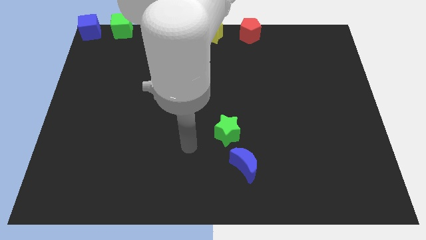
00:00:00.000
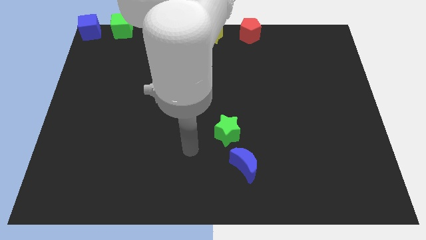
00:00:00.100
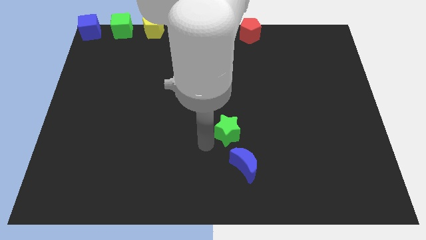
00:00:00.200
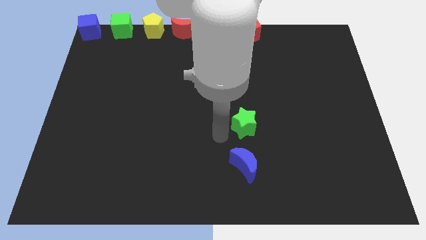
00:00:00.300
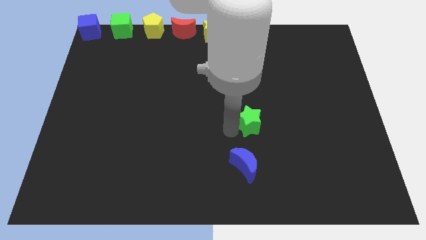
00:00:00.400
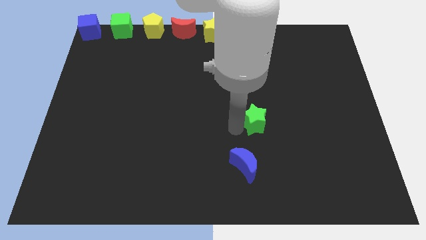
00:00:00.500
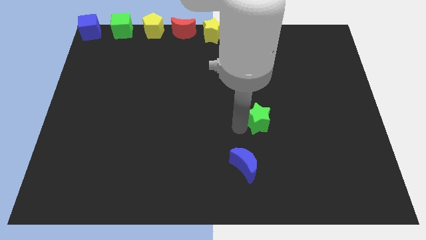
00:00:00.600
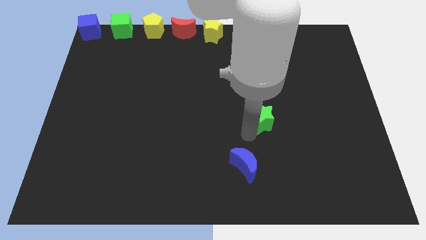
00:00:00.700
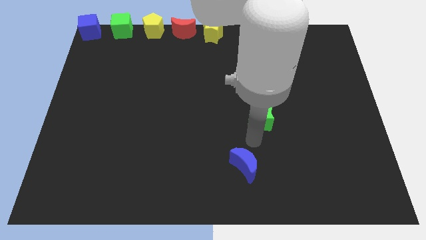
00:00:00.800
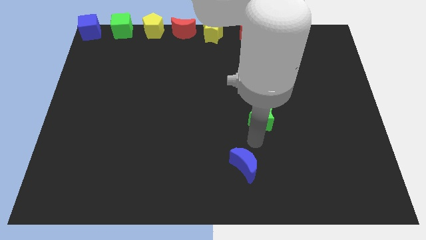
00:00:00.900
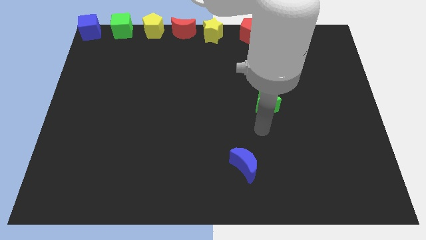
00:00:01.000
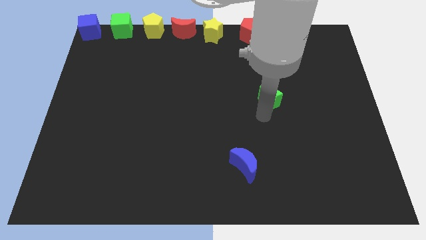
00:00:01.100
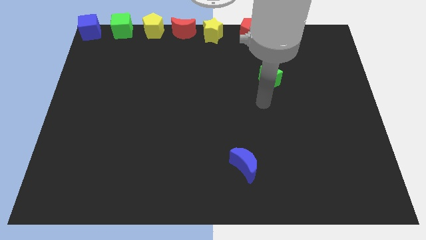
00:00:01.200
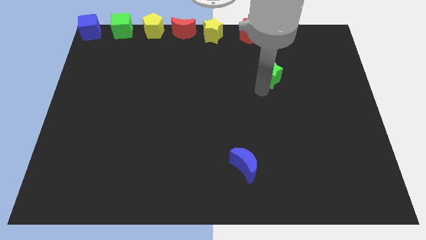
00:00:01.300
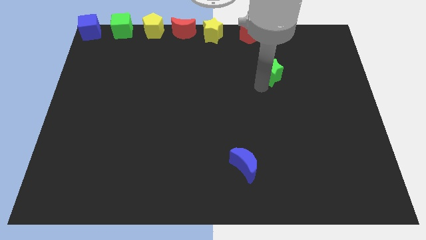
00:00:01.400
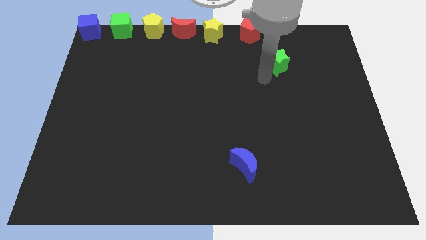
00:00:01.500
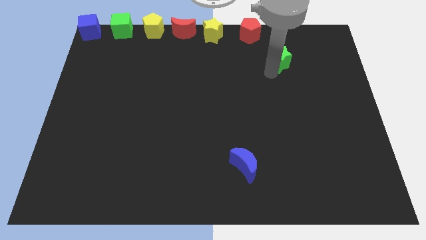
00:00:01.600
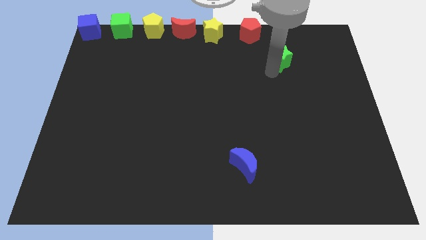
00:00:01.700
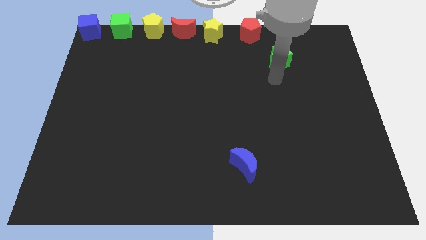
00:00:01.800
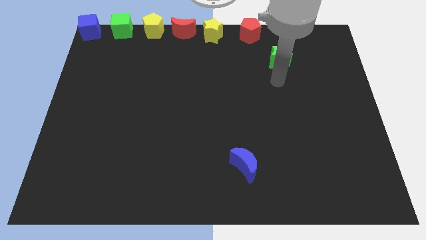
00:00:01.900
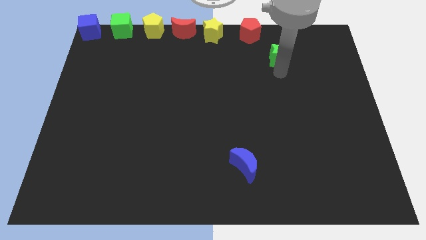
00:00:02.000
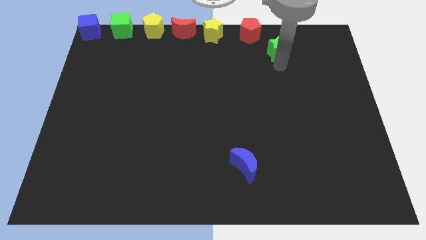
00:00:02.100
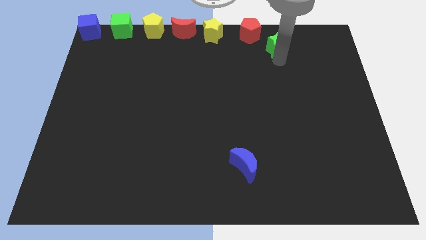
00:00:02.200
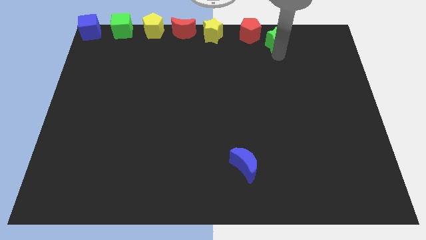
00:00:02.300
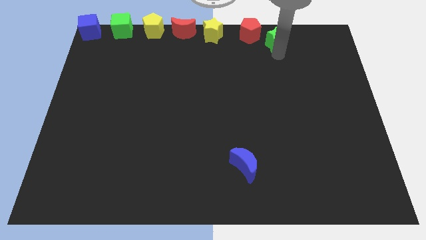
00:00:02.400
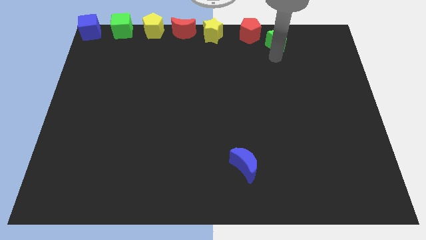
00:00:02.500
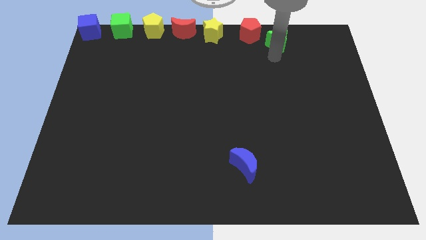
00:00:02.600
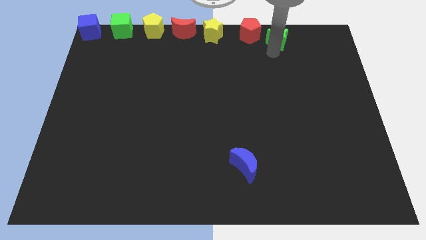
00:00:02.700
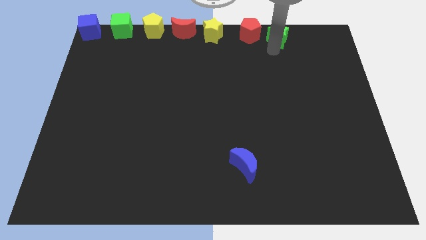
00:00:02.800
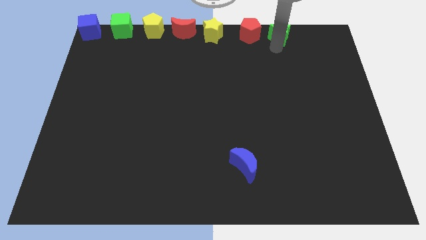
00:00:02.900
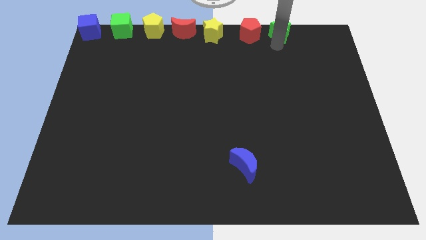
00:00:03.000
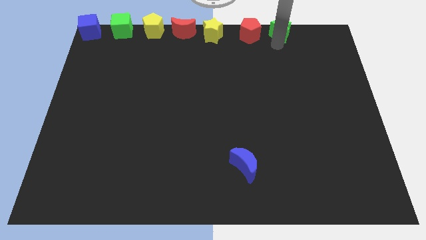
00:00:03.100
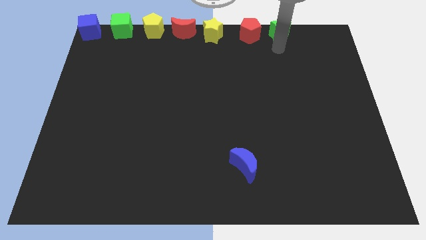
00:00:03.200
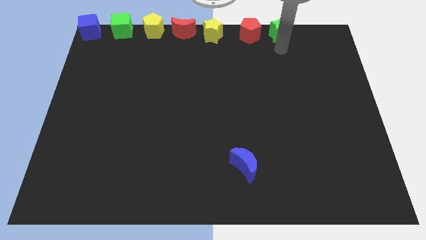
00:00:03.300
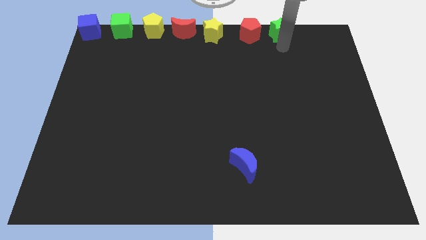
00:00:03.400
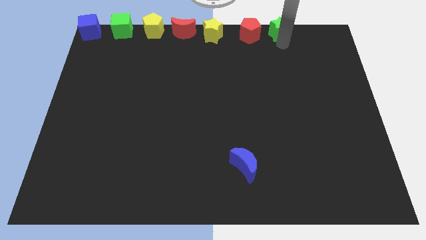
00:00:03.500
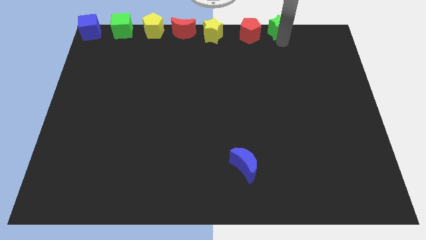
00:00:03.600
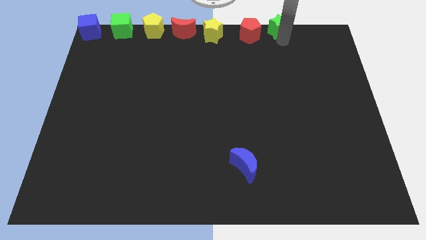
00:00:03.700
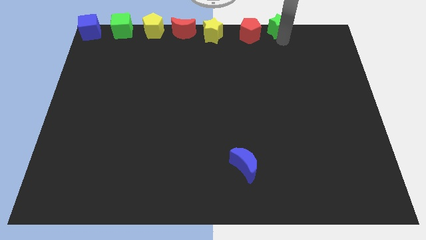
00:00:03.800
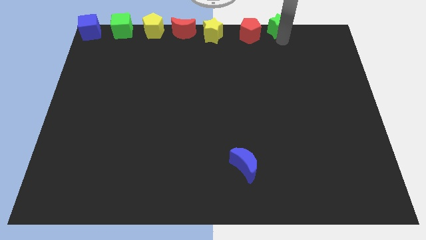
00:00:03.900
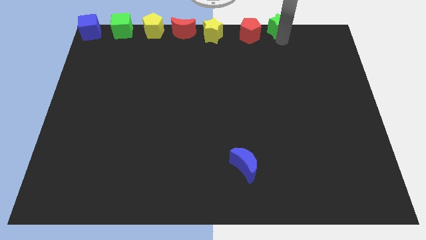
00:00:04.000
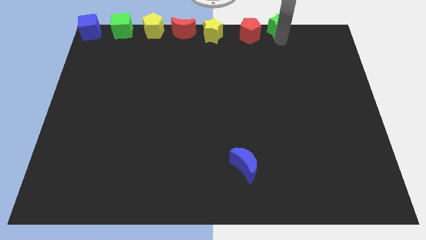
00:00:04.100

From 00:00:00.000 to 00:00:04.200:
push the green star to the right of the red pentagon

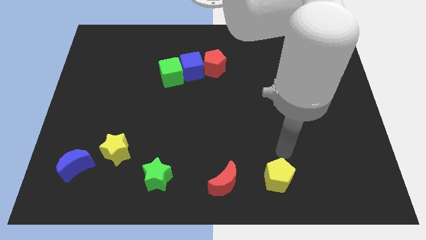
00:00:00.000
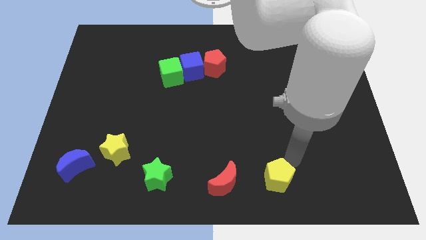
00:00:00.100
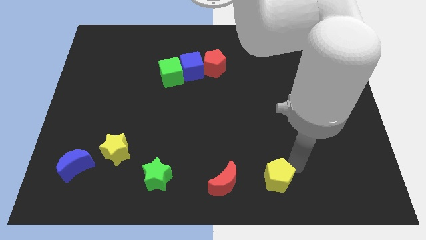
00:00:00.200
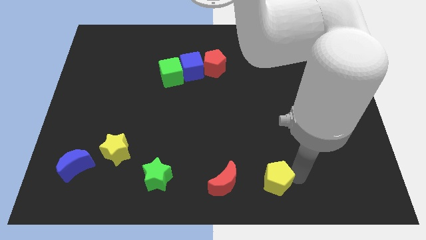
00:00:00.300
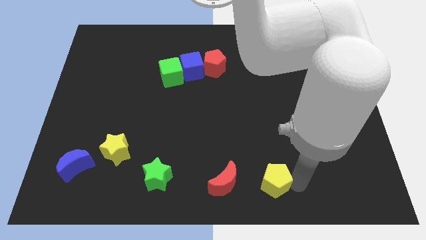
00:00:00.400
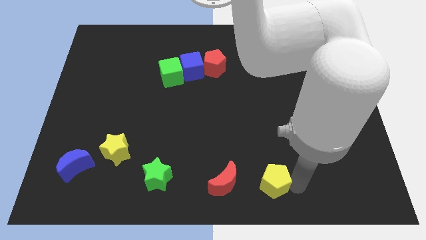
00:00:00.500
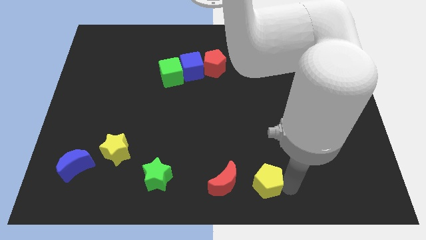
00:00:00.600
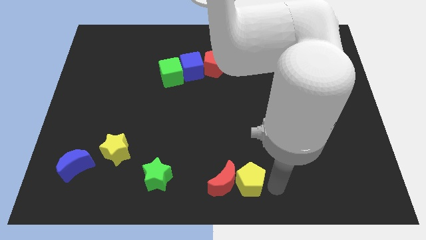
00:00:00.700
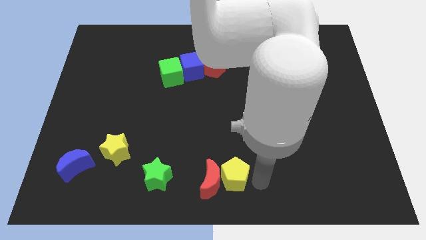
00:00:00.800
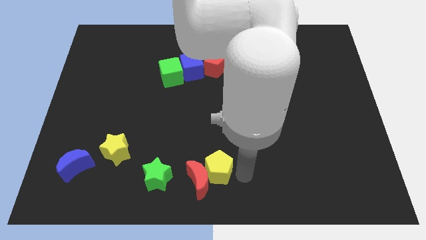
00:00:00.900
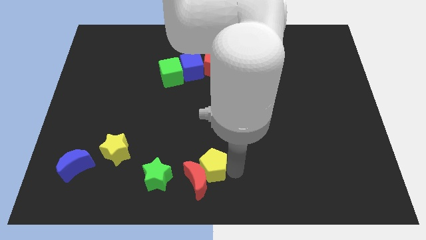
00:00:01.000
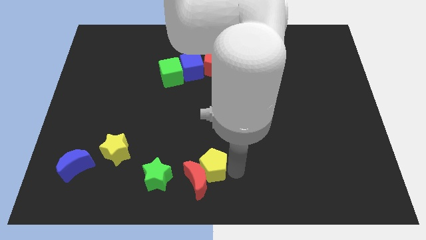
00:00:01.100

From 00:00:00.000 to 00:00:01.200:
move the yellow pentagon into the red moon

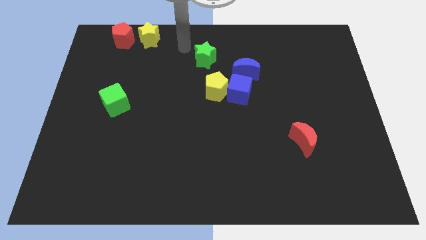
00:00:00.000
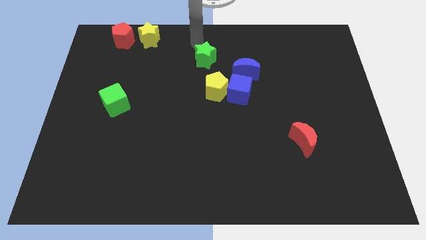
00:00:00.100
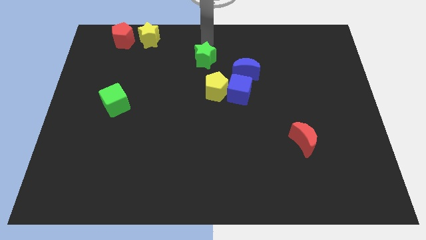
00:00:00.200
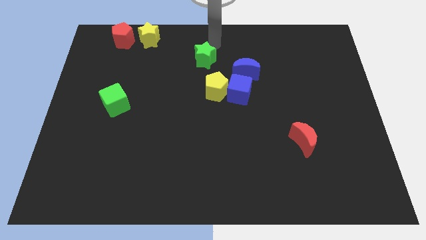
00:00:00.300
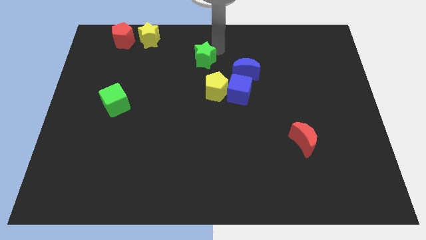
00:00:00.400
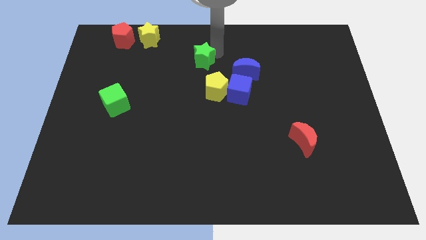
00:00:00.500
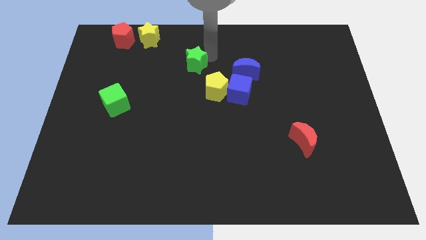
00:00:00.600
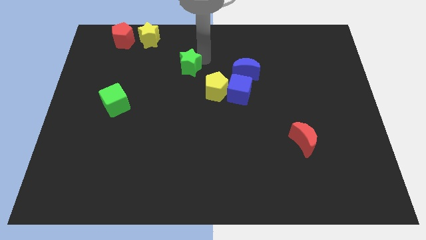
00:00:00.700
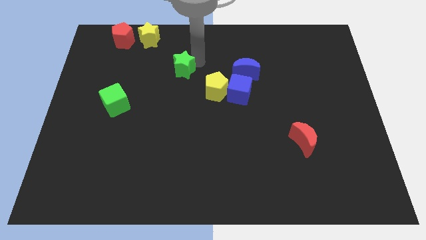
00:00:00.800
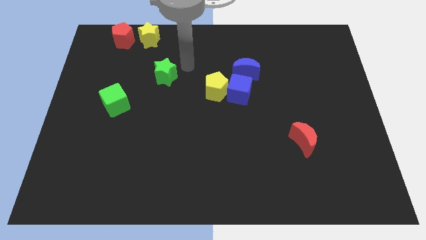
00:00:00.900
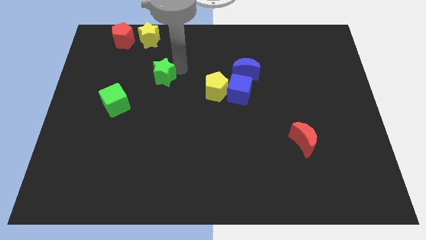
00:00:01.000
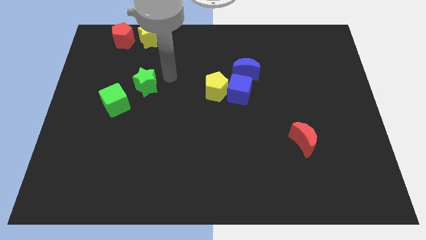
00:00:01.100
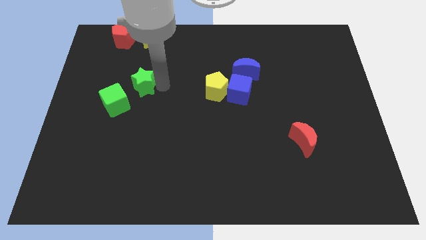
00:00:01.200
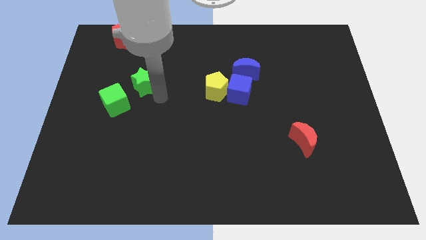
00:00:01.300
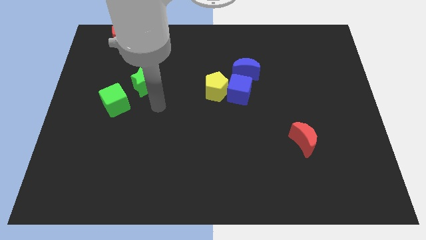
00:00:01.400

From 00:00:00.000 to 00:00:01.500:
move the green star right beside the green cube

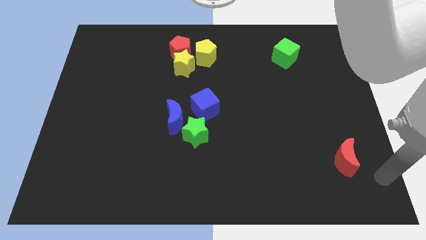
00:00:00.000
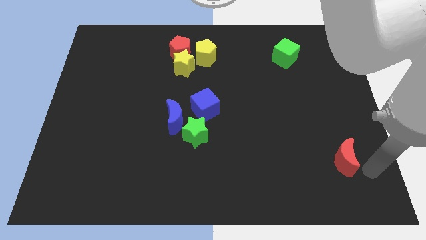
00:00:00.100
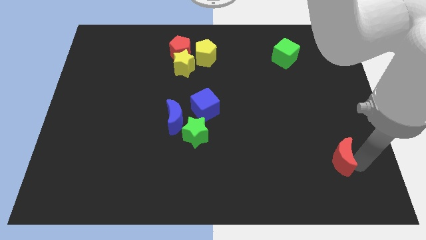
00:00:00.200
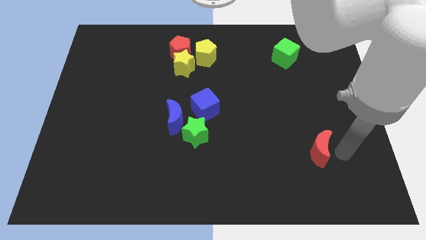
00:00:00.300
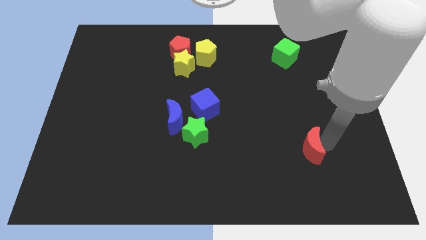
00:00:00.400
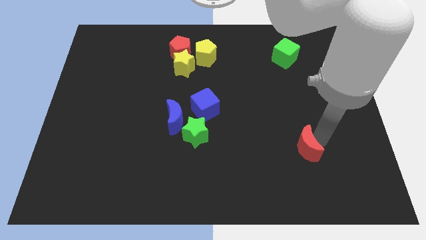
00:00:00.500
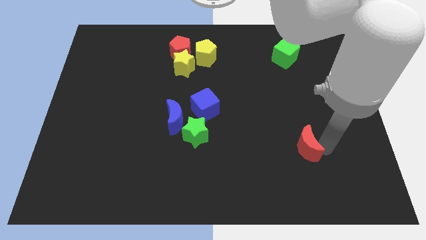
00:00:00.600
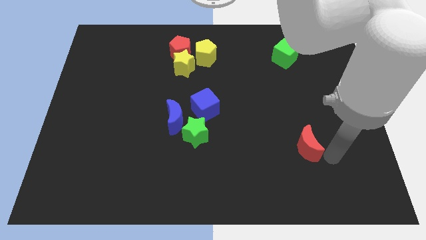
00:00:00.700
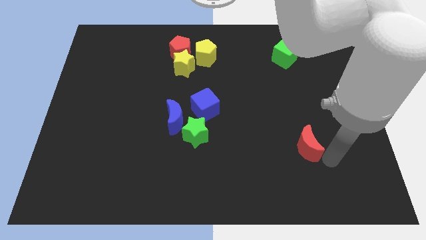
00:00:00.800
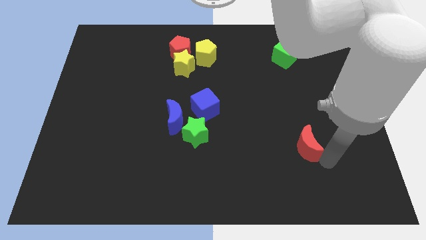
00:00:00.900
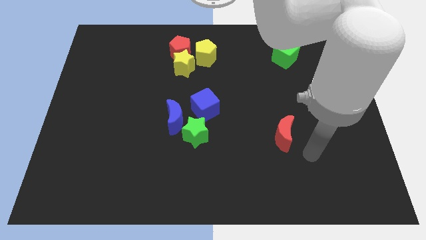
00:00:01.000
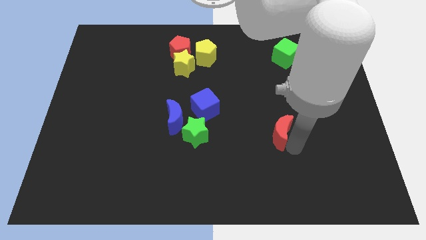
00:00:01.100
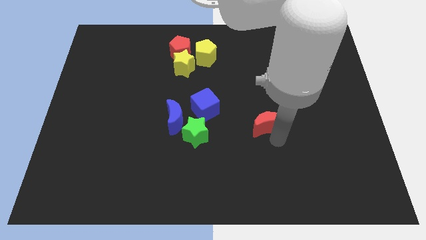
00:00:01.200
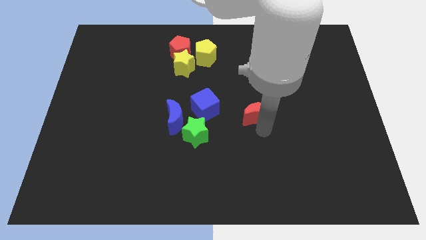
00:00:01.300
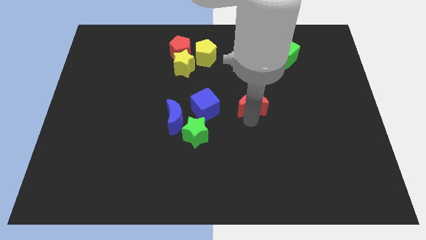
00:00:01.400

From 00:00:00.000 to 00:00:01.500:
push the red crescent right side of the blue cube

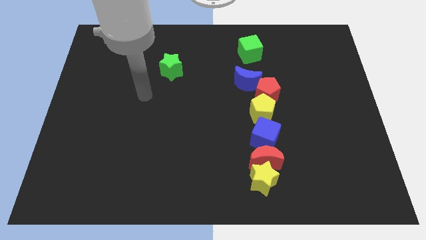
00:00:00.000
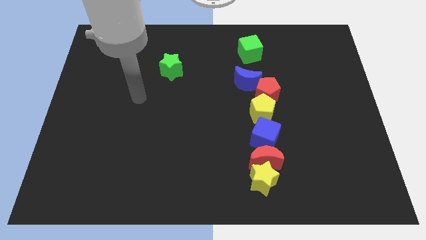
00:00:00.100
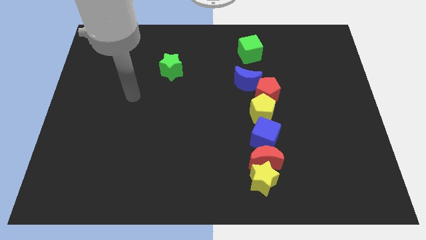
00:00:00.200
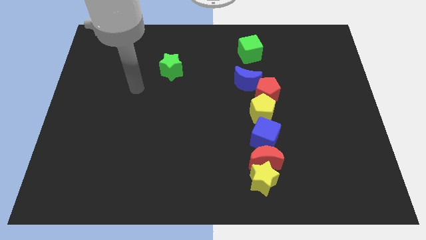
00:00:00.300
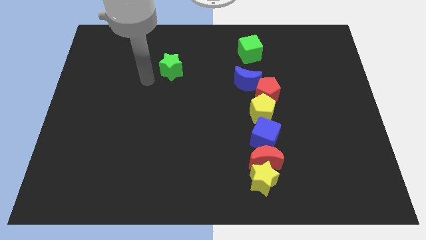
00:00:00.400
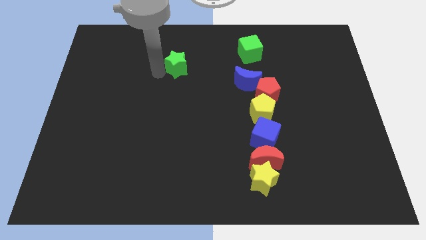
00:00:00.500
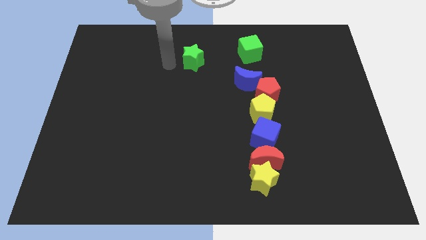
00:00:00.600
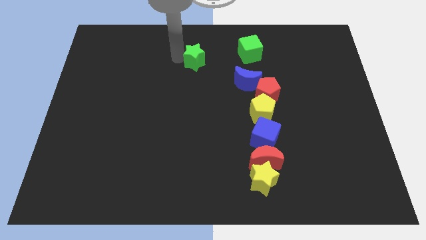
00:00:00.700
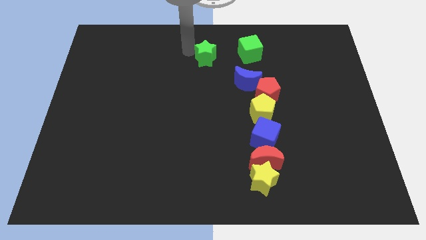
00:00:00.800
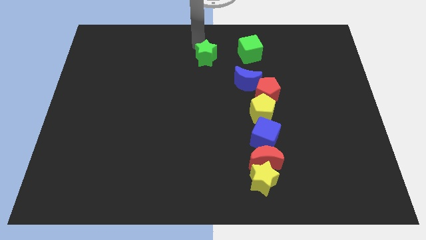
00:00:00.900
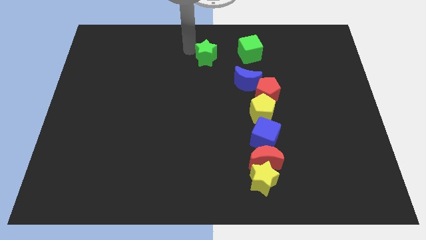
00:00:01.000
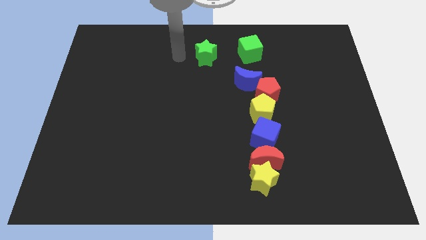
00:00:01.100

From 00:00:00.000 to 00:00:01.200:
move the green star to the left of the green cube
